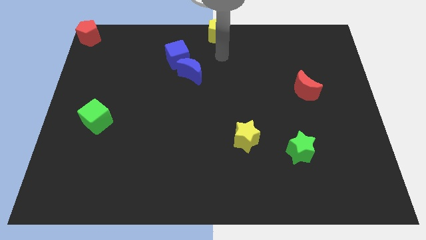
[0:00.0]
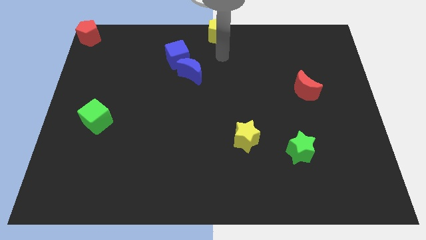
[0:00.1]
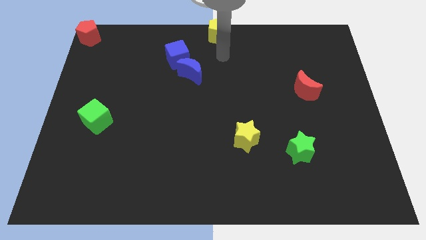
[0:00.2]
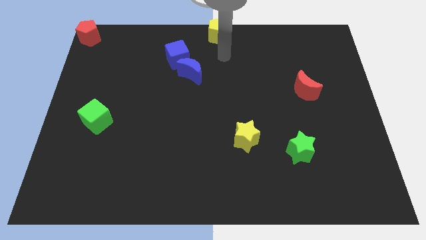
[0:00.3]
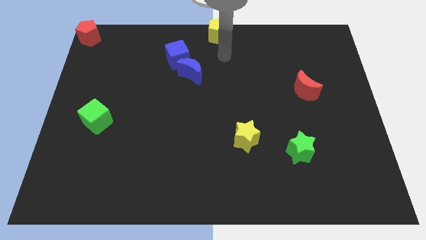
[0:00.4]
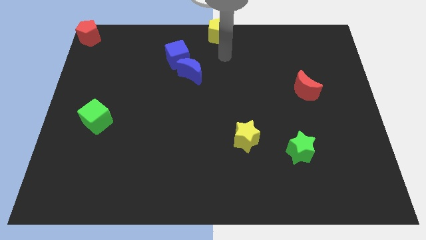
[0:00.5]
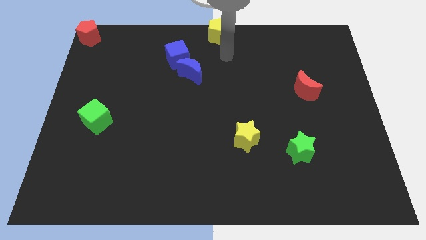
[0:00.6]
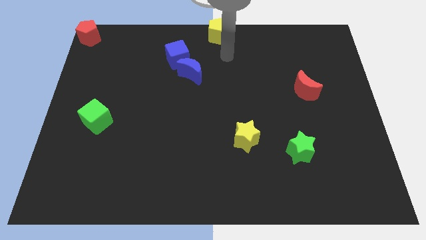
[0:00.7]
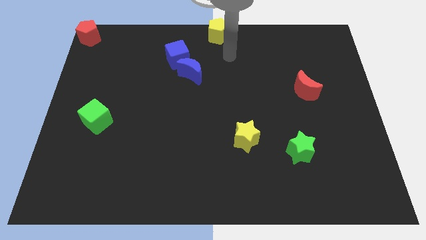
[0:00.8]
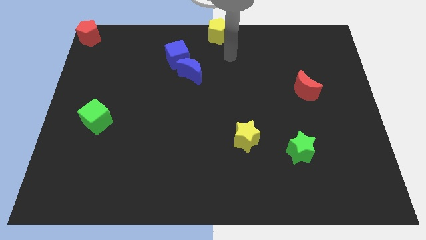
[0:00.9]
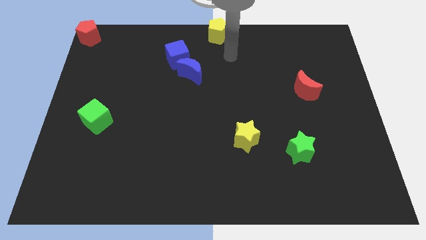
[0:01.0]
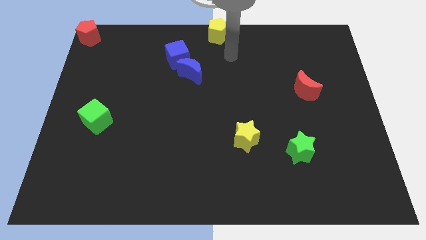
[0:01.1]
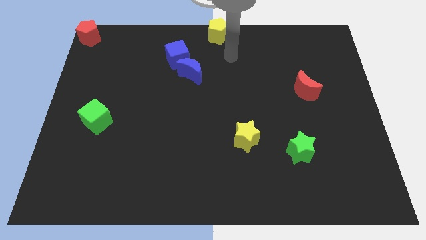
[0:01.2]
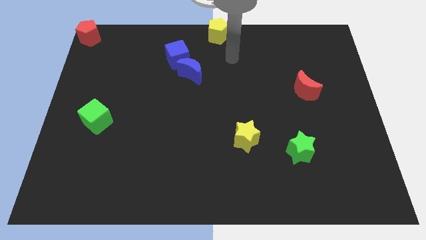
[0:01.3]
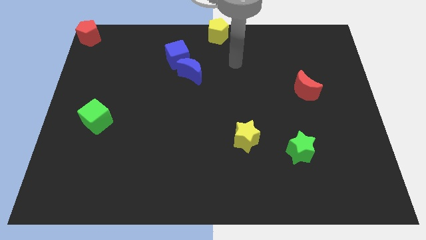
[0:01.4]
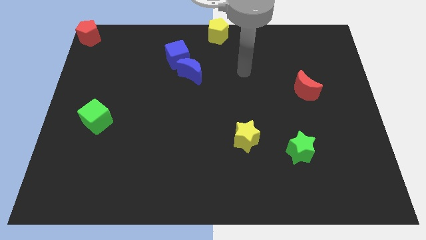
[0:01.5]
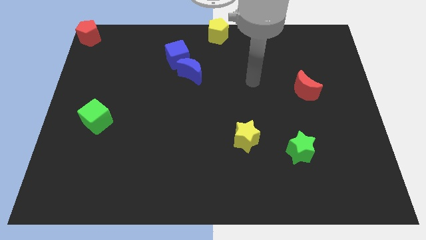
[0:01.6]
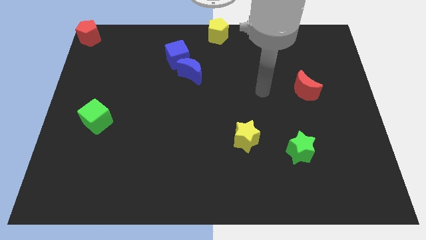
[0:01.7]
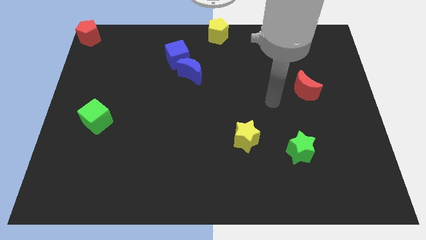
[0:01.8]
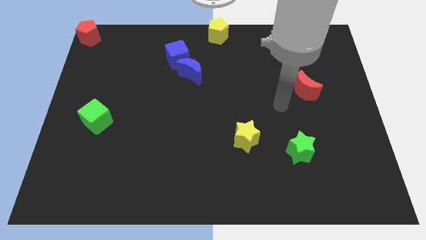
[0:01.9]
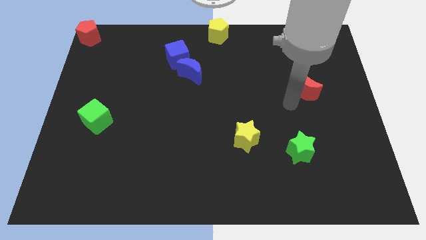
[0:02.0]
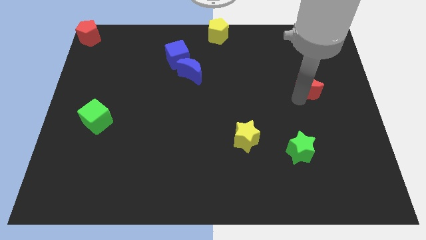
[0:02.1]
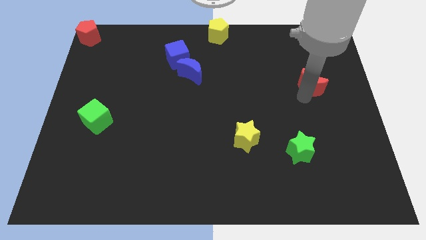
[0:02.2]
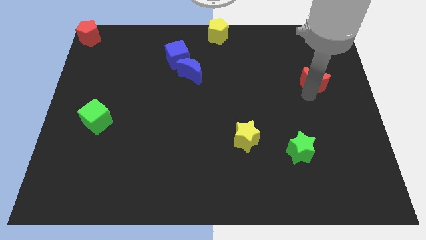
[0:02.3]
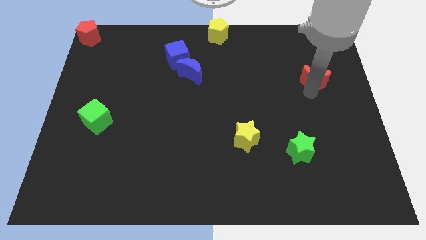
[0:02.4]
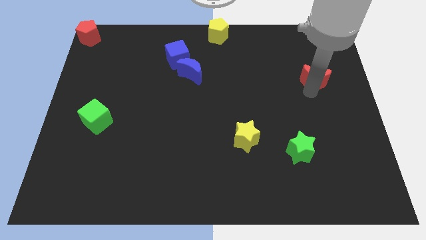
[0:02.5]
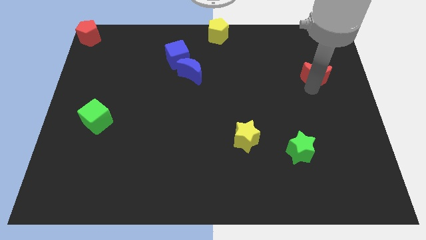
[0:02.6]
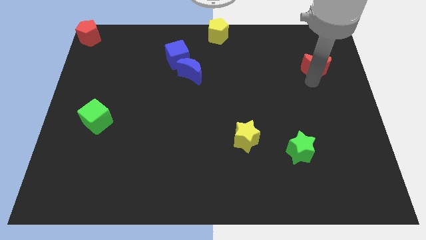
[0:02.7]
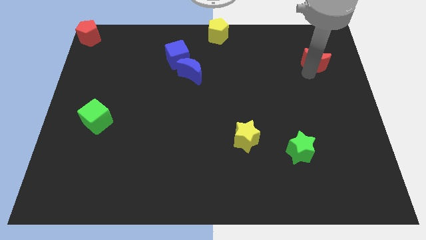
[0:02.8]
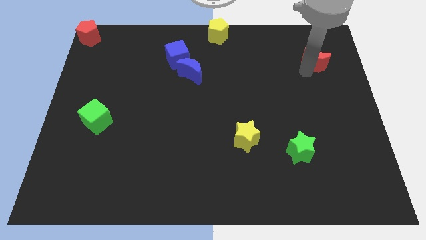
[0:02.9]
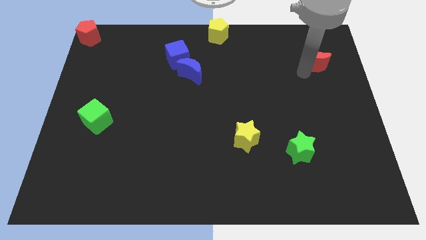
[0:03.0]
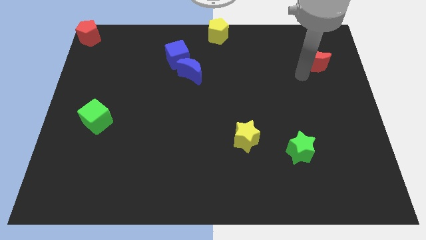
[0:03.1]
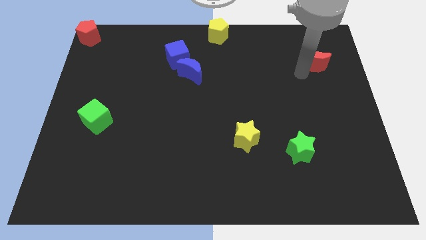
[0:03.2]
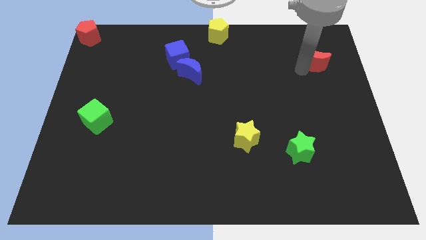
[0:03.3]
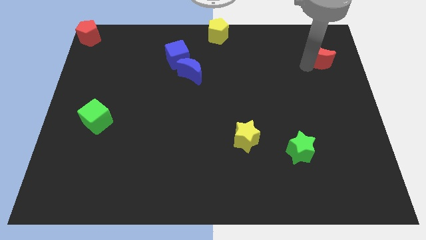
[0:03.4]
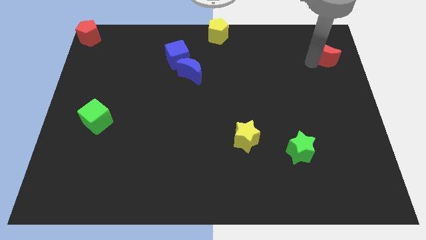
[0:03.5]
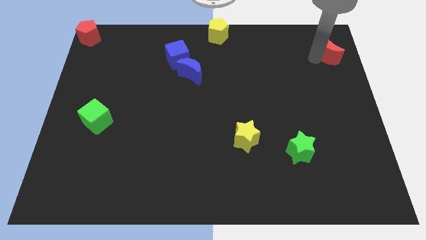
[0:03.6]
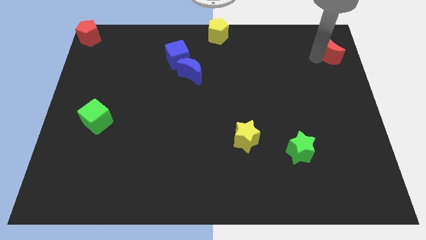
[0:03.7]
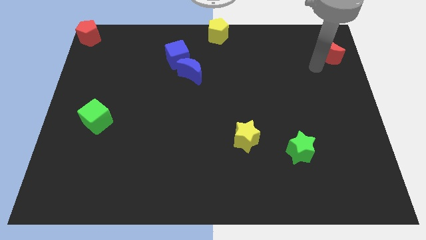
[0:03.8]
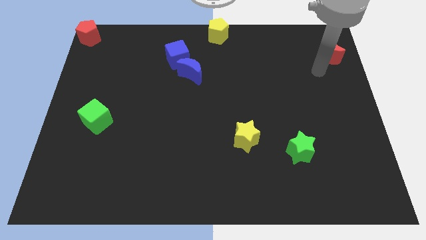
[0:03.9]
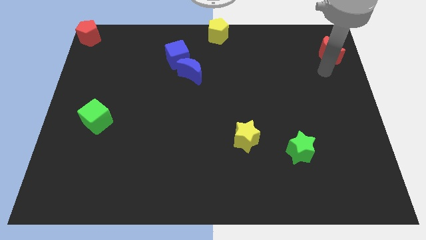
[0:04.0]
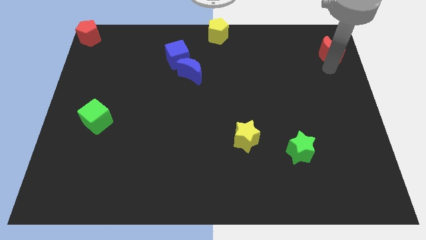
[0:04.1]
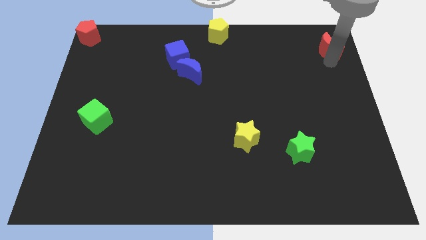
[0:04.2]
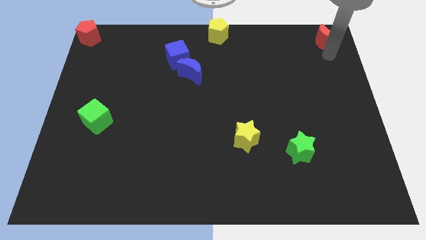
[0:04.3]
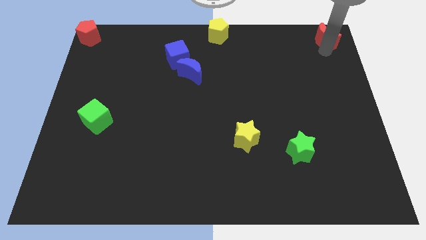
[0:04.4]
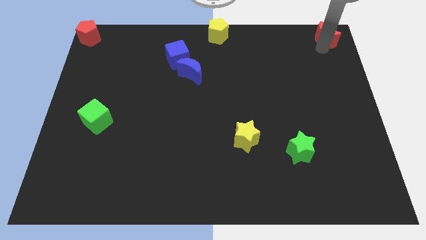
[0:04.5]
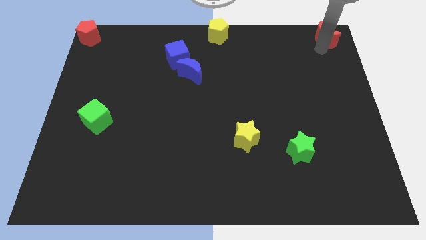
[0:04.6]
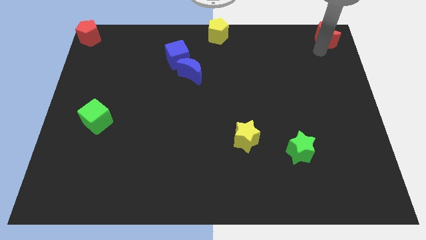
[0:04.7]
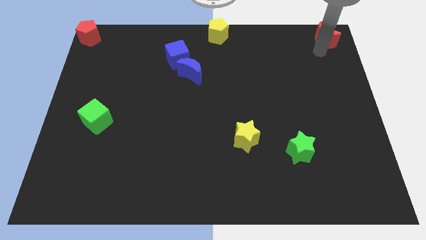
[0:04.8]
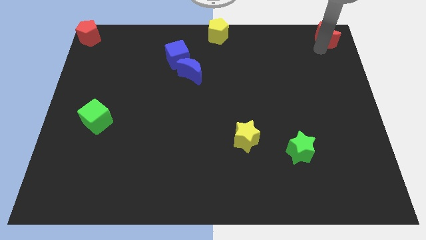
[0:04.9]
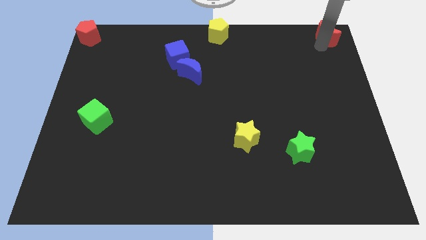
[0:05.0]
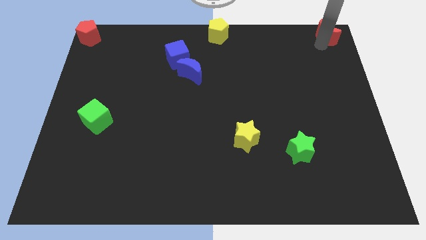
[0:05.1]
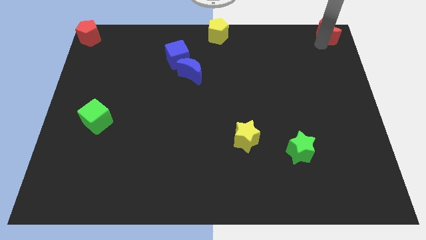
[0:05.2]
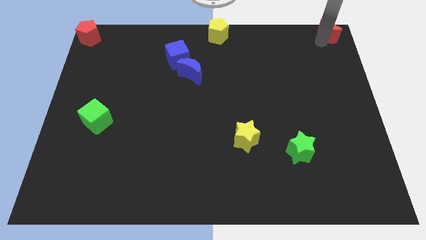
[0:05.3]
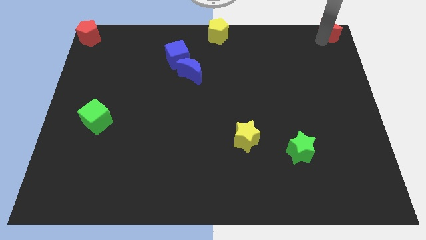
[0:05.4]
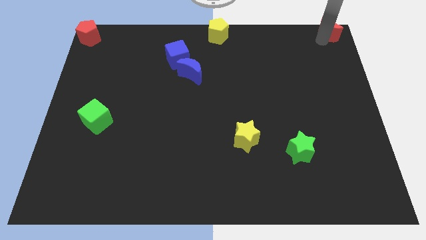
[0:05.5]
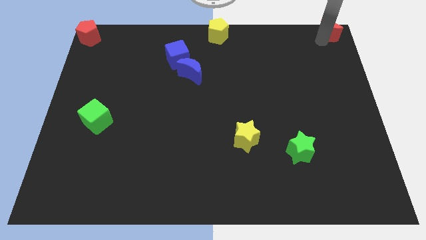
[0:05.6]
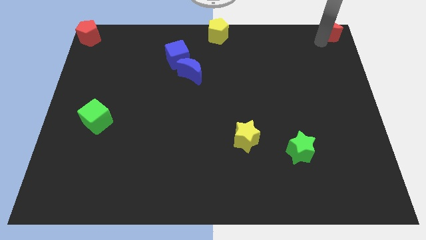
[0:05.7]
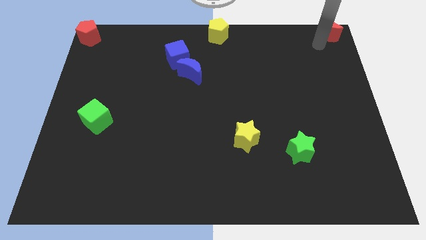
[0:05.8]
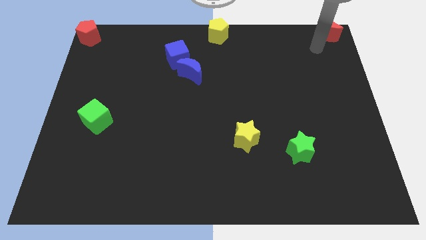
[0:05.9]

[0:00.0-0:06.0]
move the red moon on the top right of the board

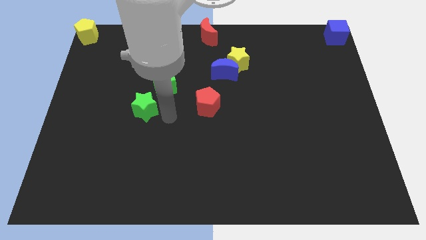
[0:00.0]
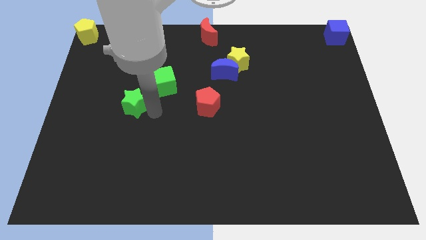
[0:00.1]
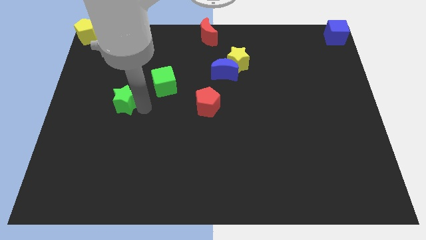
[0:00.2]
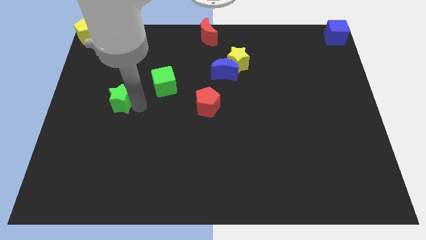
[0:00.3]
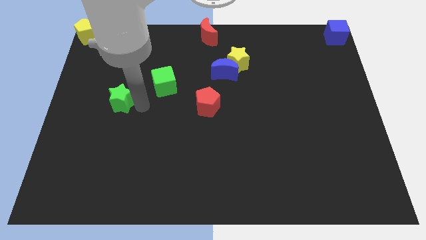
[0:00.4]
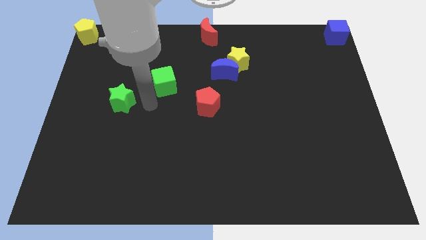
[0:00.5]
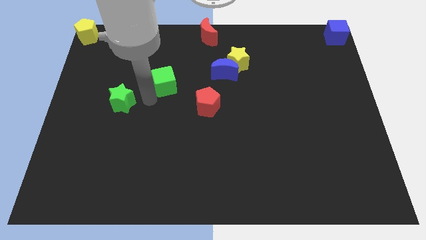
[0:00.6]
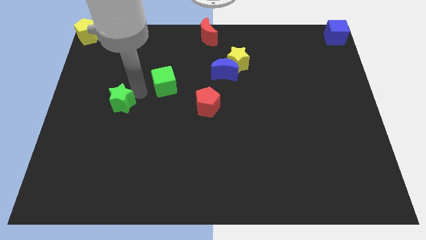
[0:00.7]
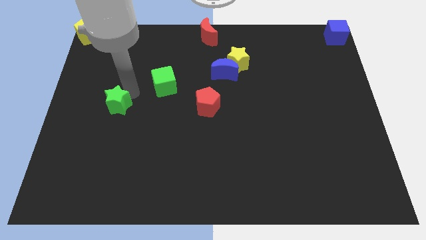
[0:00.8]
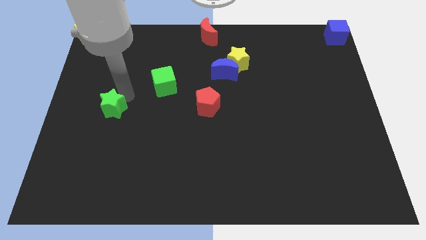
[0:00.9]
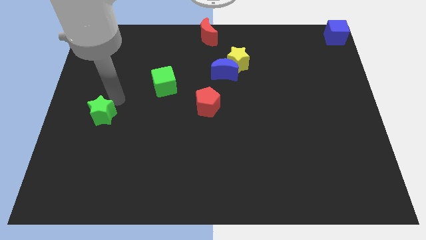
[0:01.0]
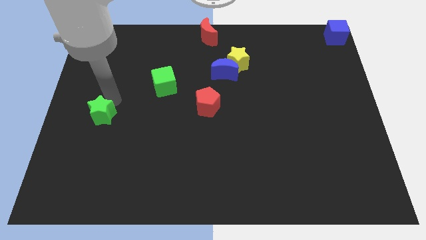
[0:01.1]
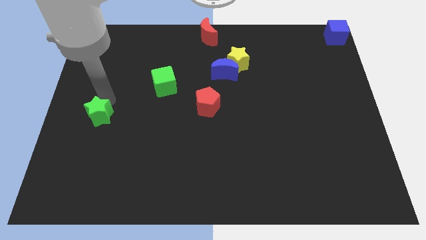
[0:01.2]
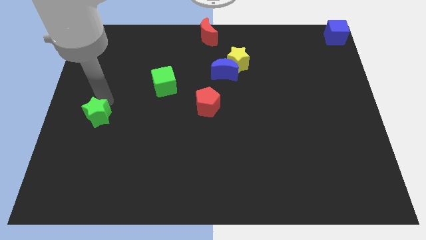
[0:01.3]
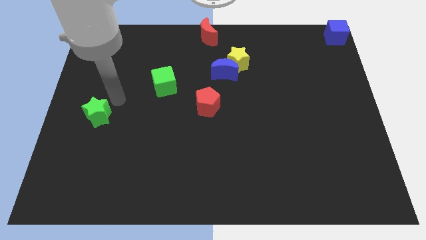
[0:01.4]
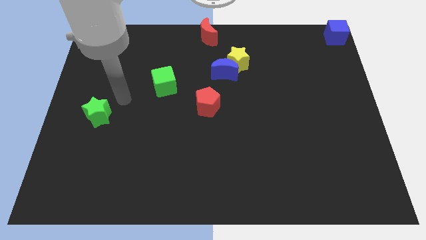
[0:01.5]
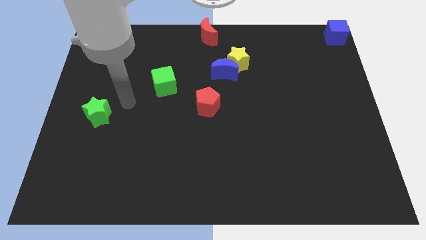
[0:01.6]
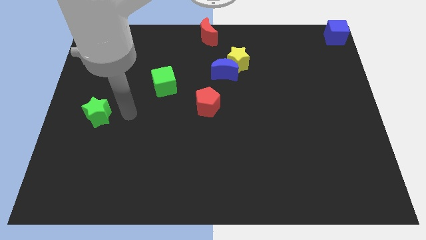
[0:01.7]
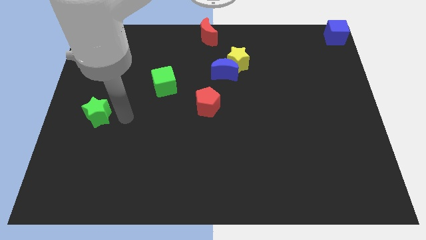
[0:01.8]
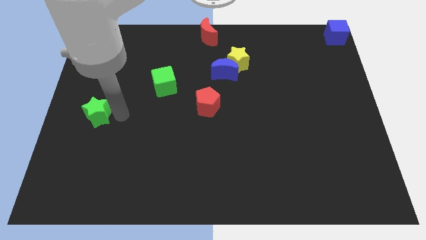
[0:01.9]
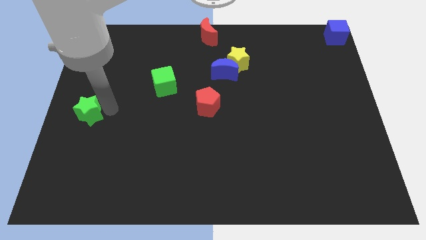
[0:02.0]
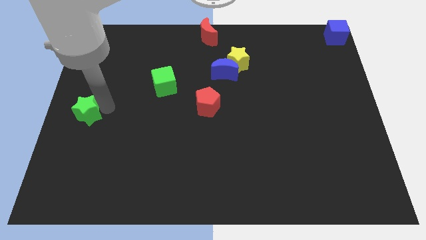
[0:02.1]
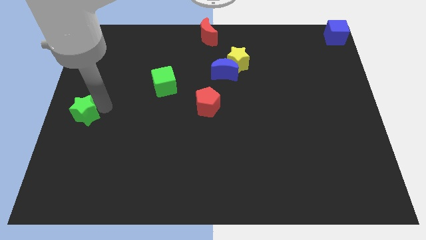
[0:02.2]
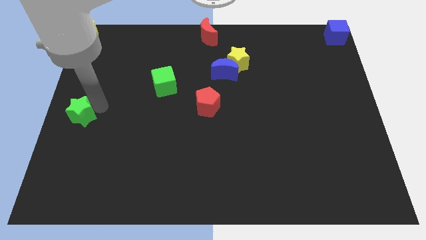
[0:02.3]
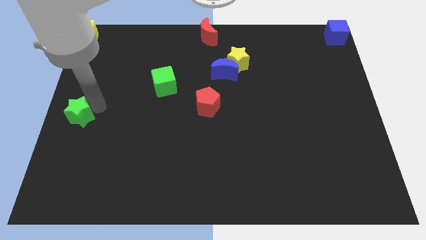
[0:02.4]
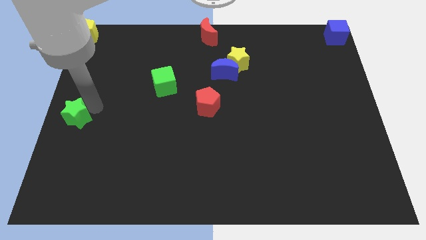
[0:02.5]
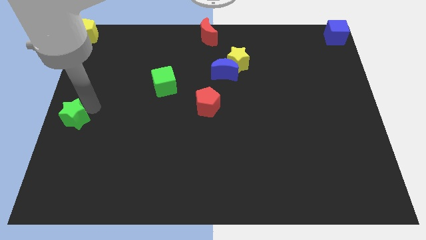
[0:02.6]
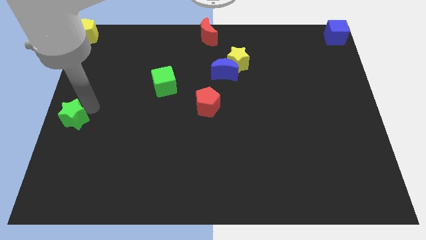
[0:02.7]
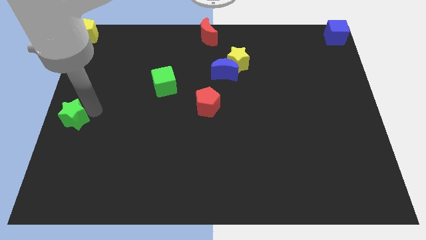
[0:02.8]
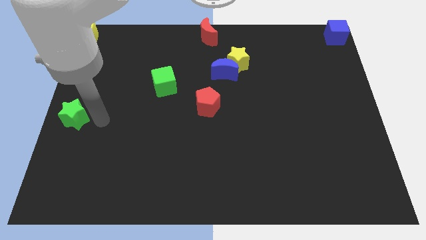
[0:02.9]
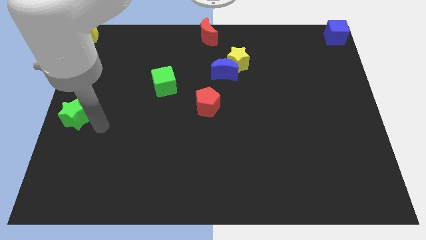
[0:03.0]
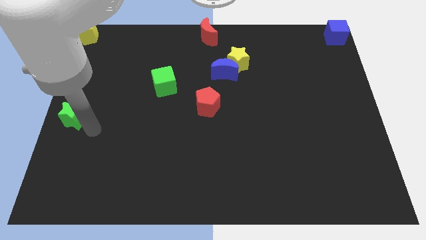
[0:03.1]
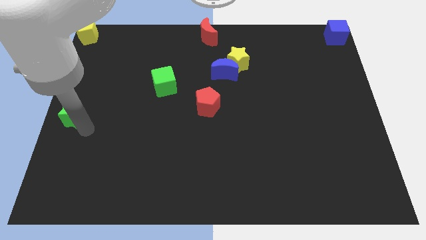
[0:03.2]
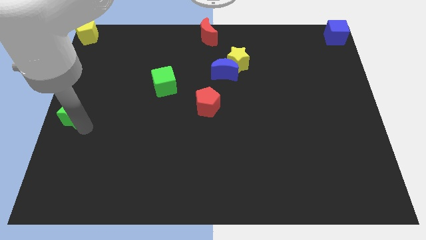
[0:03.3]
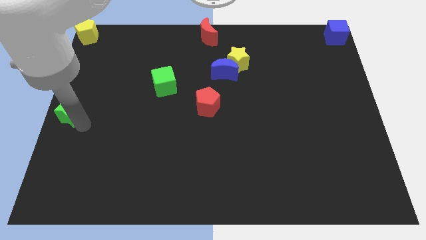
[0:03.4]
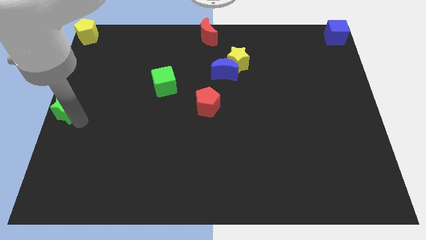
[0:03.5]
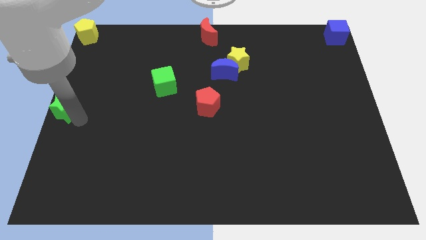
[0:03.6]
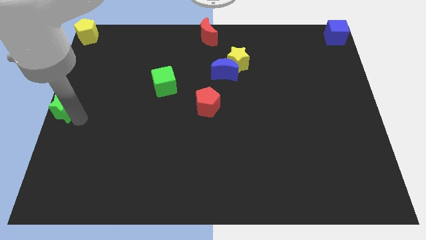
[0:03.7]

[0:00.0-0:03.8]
place the green star at left center of the board
